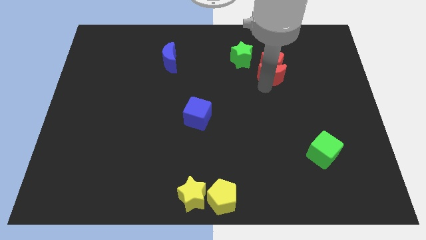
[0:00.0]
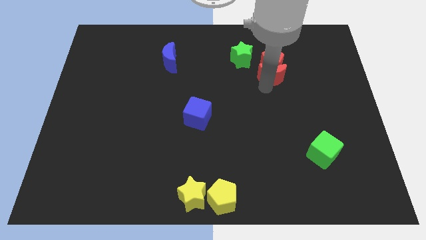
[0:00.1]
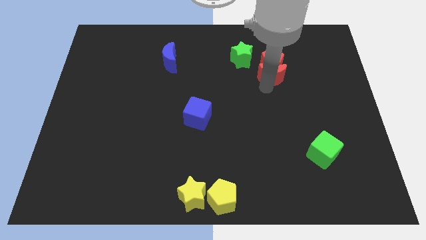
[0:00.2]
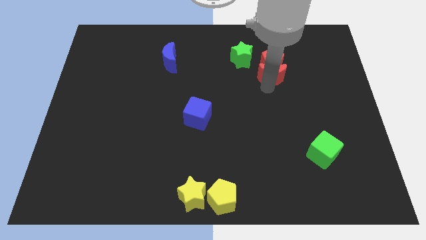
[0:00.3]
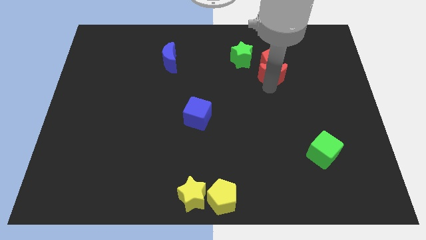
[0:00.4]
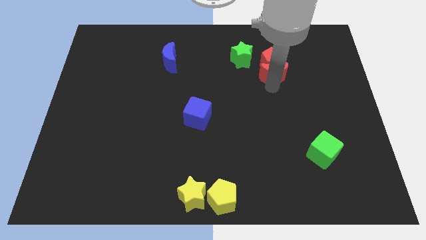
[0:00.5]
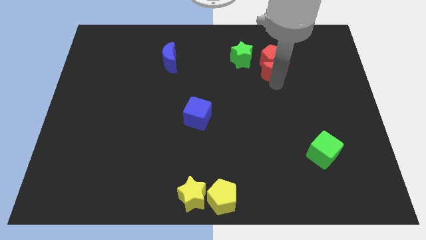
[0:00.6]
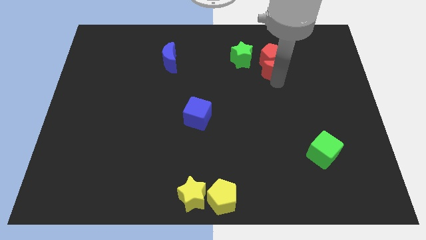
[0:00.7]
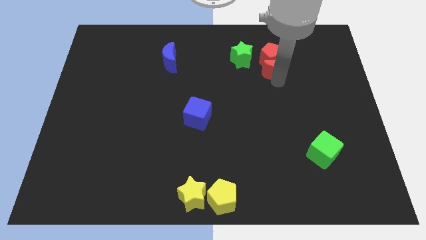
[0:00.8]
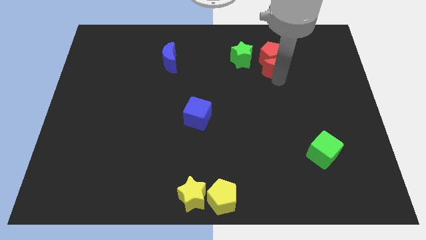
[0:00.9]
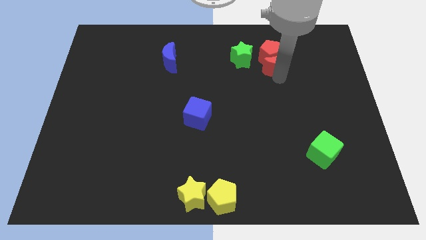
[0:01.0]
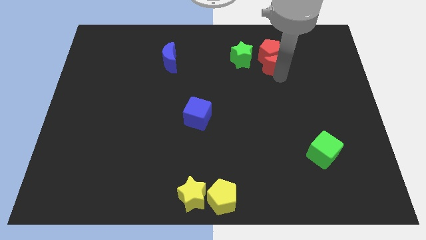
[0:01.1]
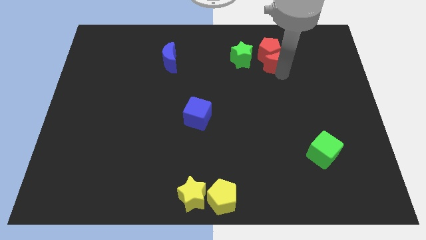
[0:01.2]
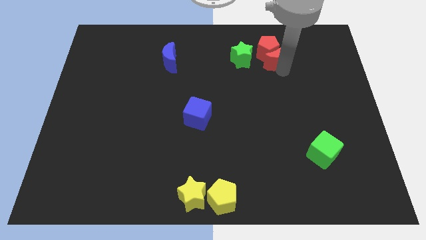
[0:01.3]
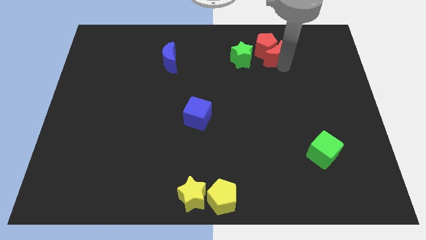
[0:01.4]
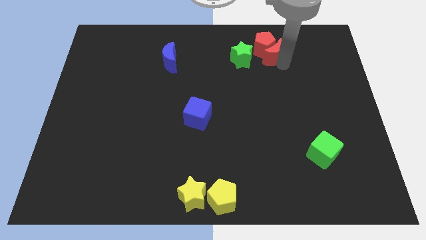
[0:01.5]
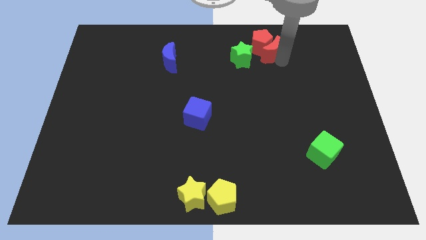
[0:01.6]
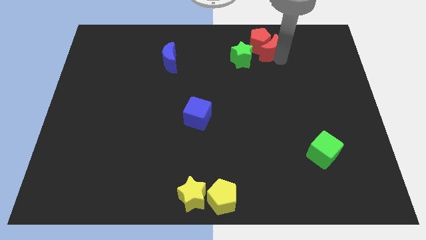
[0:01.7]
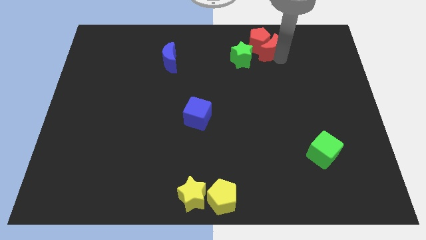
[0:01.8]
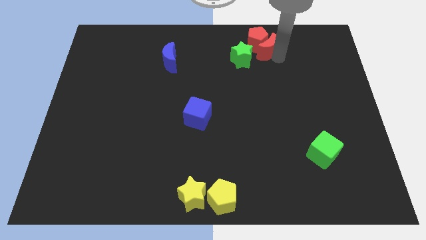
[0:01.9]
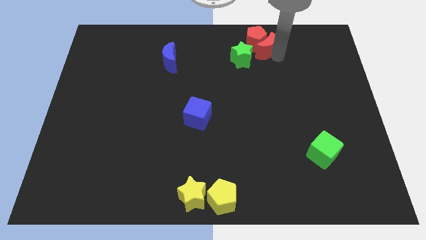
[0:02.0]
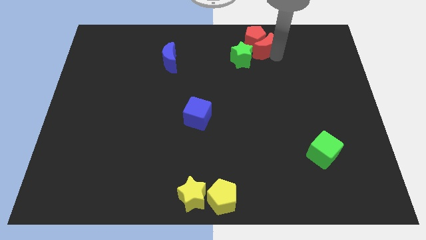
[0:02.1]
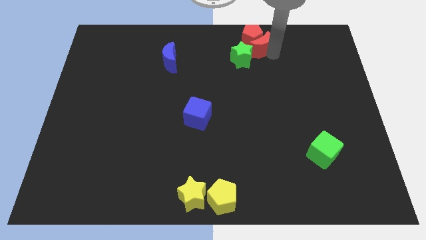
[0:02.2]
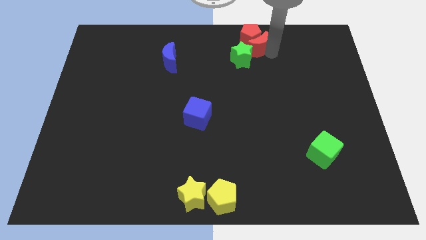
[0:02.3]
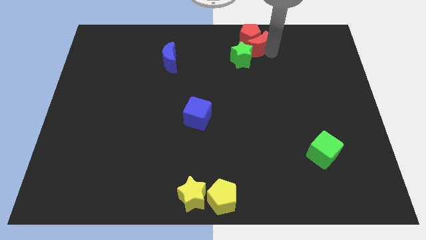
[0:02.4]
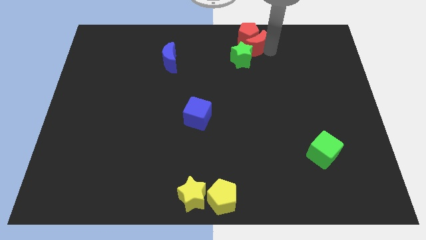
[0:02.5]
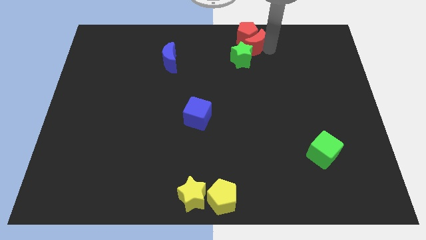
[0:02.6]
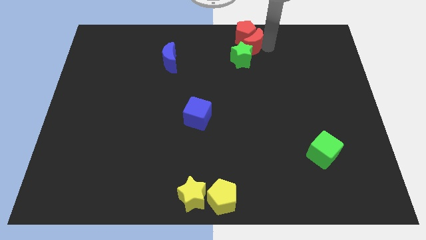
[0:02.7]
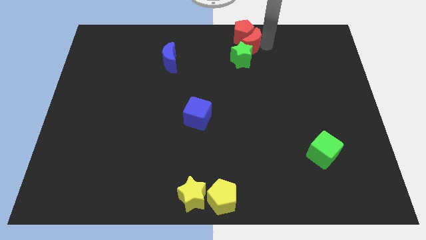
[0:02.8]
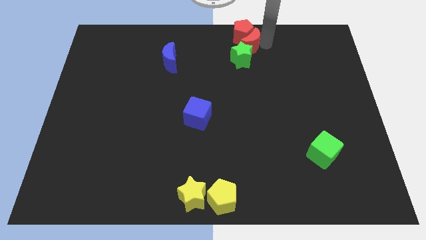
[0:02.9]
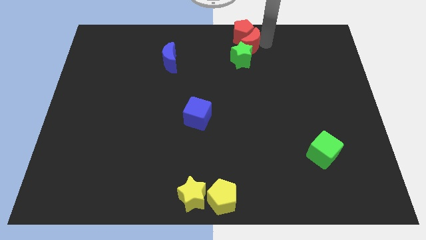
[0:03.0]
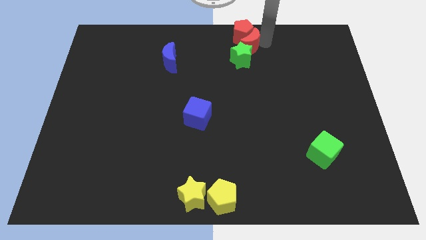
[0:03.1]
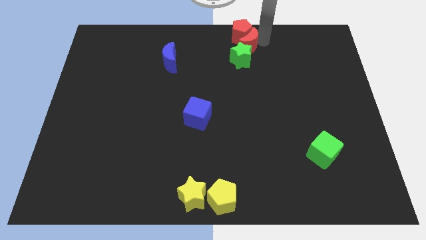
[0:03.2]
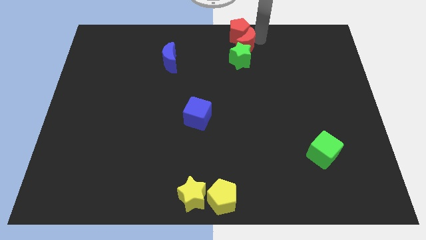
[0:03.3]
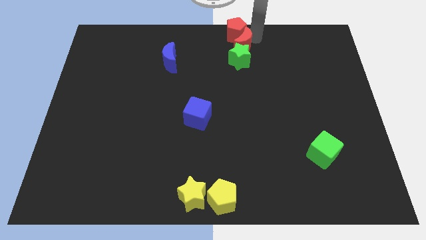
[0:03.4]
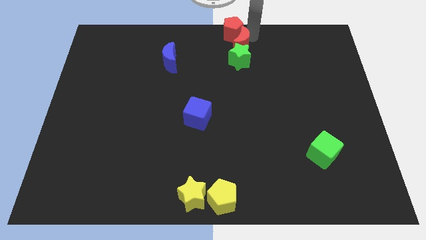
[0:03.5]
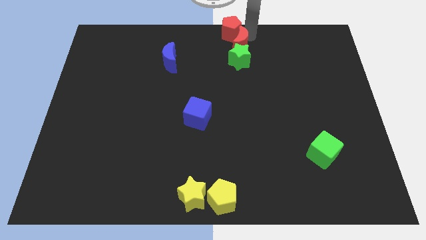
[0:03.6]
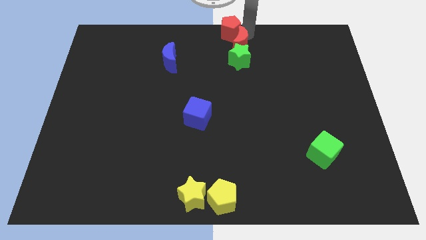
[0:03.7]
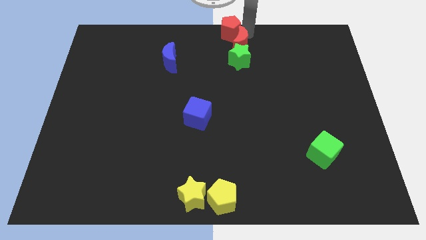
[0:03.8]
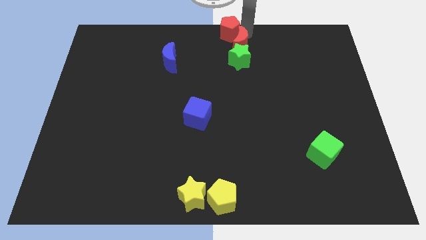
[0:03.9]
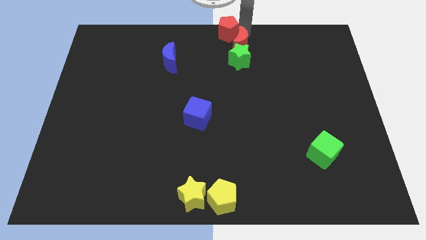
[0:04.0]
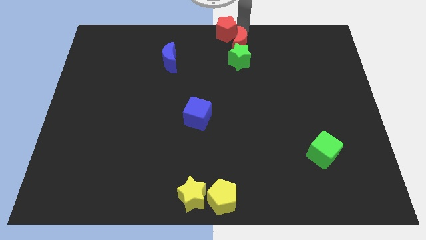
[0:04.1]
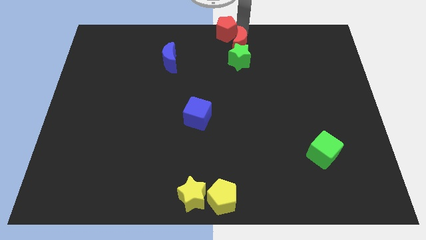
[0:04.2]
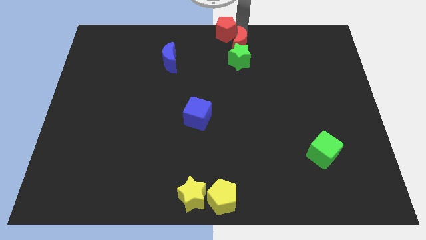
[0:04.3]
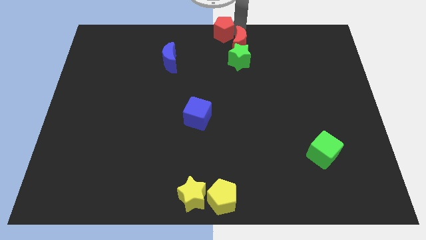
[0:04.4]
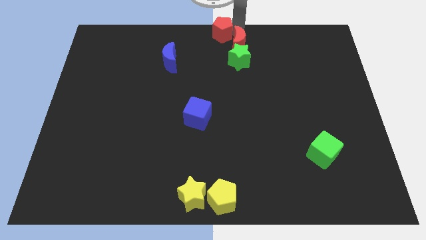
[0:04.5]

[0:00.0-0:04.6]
push the red crescent along the red pentagon to the top center of the board

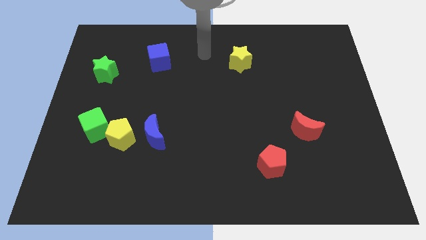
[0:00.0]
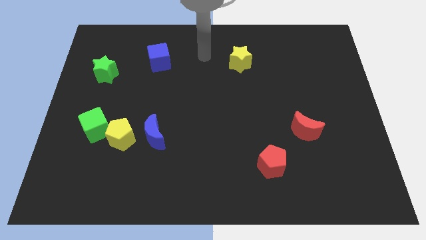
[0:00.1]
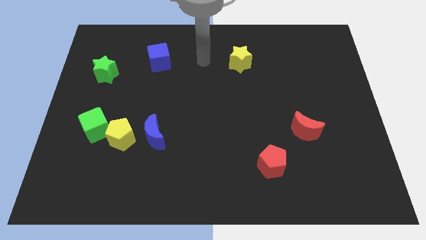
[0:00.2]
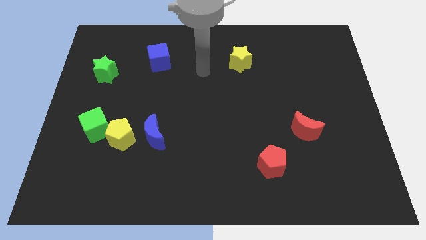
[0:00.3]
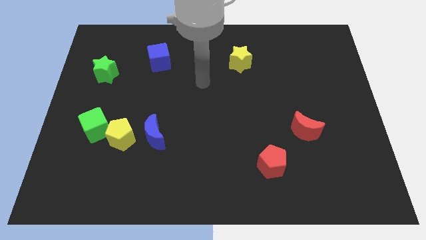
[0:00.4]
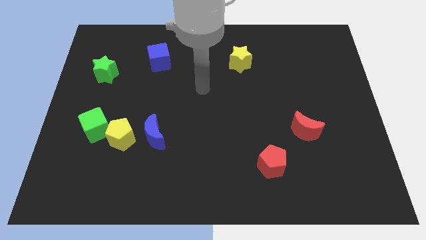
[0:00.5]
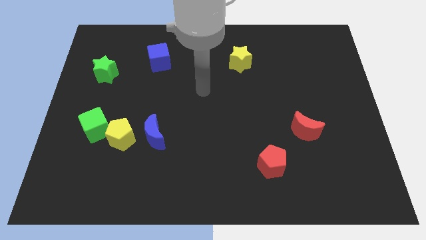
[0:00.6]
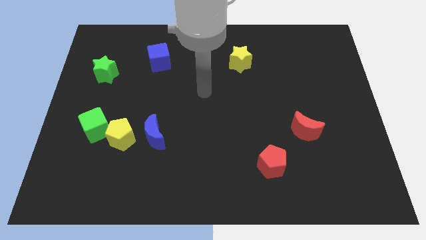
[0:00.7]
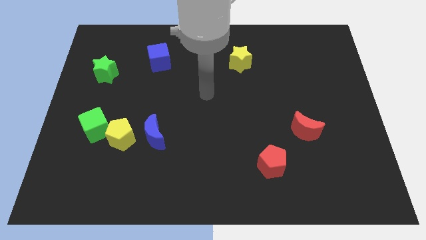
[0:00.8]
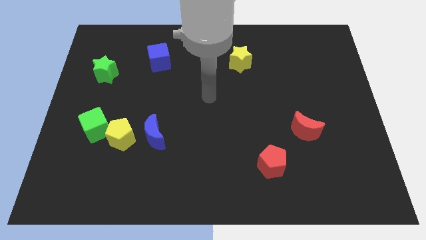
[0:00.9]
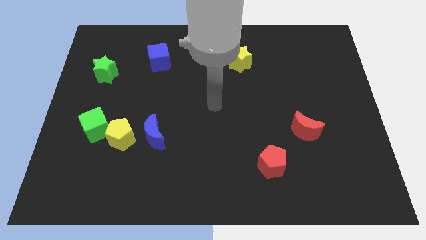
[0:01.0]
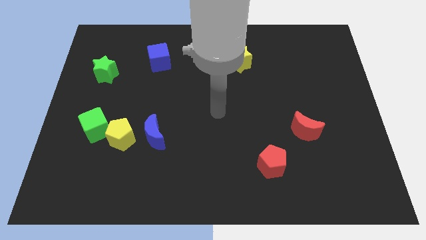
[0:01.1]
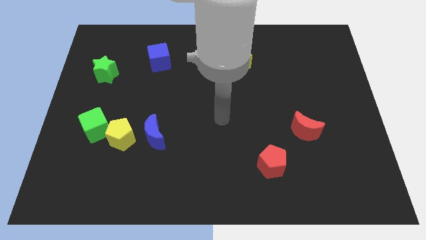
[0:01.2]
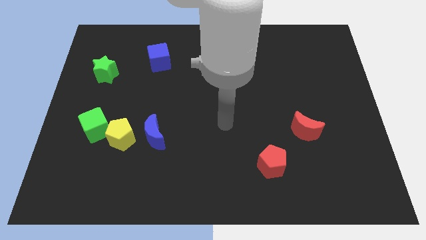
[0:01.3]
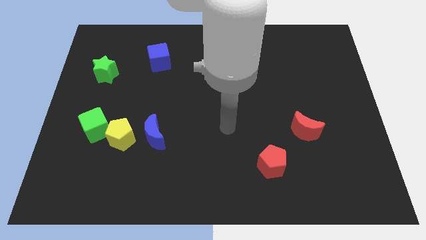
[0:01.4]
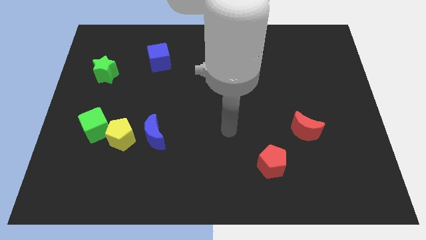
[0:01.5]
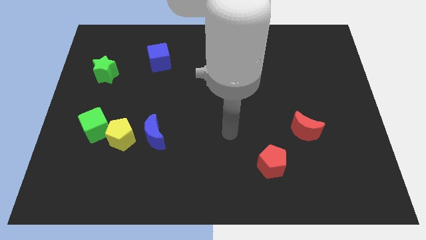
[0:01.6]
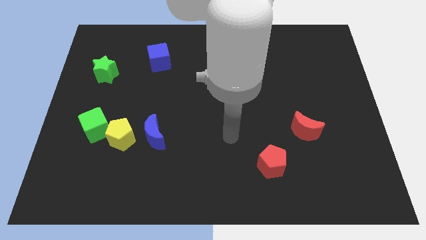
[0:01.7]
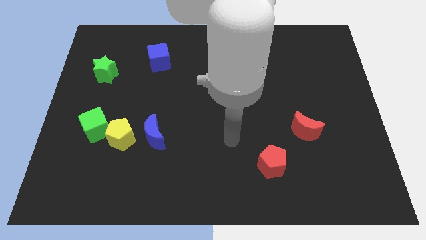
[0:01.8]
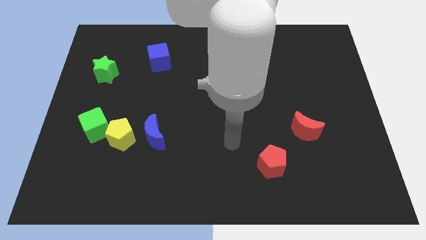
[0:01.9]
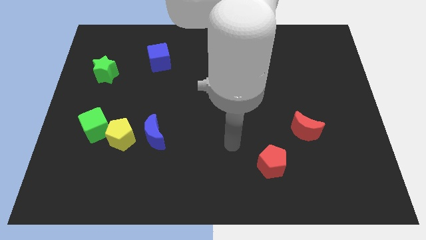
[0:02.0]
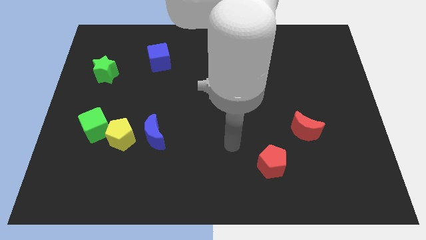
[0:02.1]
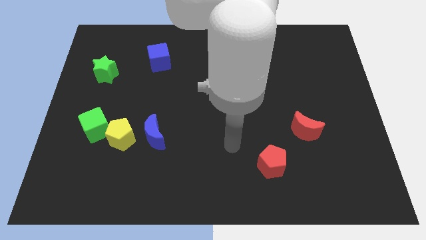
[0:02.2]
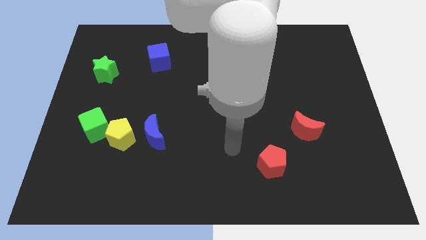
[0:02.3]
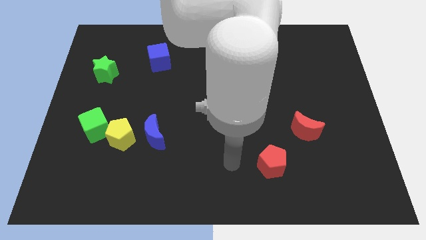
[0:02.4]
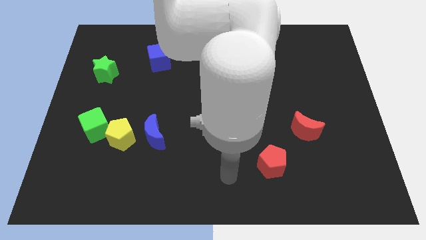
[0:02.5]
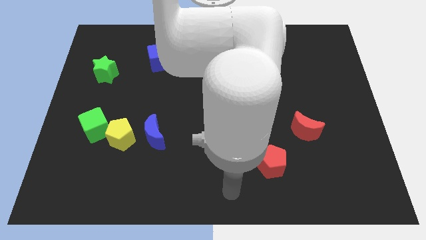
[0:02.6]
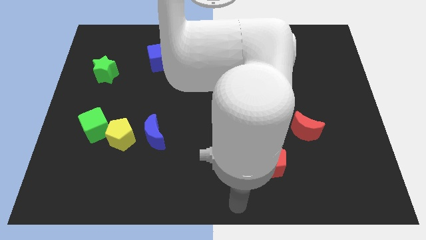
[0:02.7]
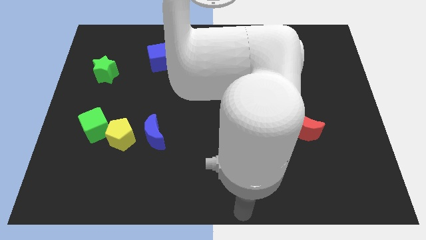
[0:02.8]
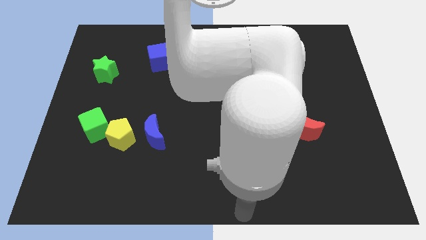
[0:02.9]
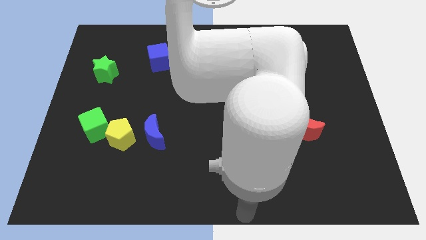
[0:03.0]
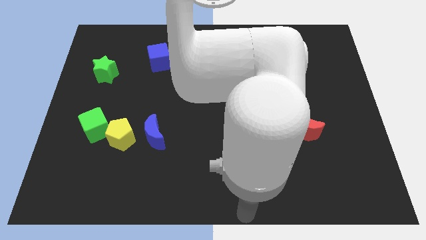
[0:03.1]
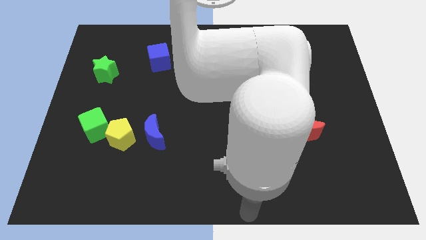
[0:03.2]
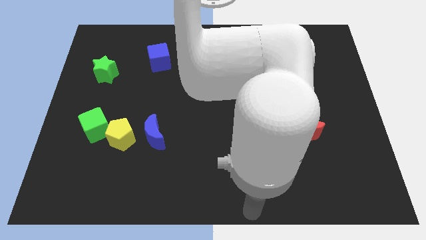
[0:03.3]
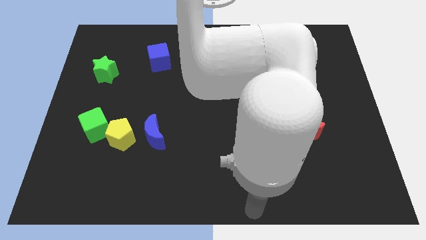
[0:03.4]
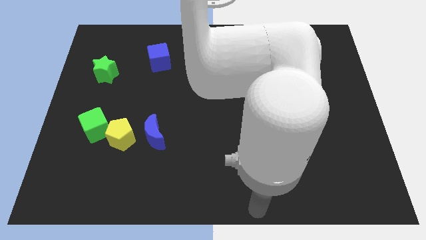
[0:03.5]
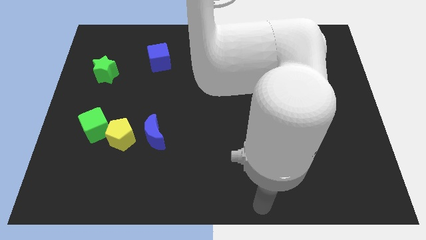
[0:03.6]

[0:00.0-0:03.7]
place your arm to the bottom of red pentagon

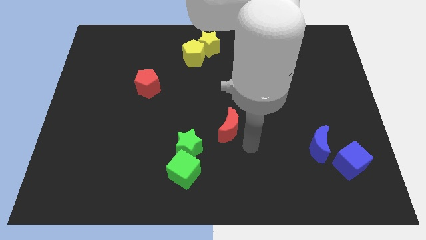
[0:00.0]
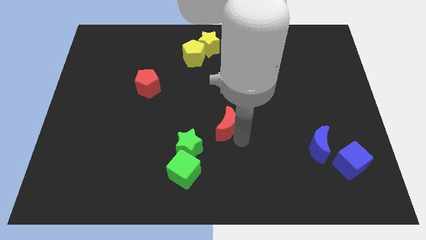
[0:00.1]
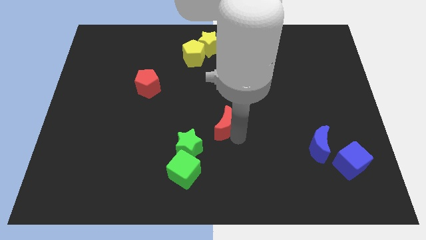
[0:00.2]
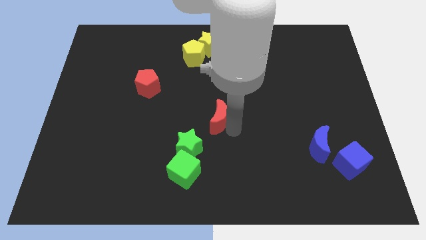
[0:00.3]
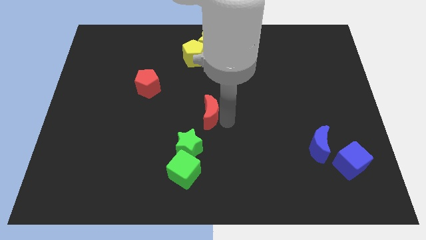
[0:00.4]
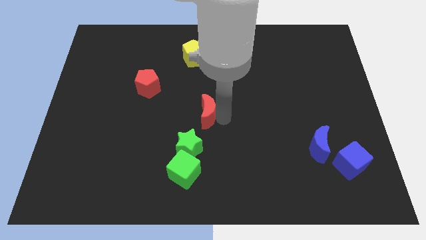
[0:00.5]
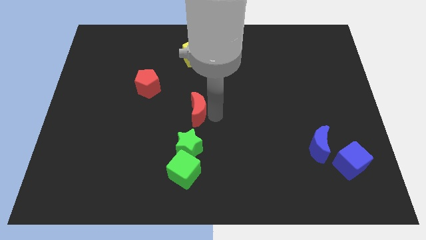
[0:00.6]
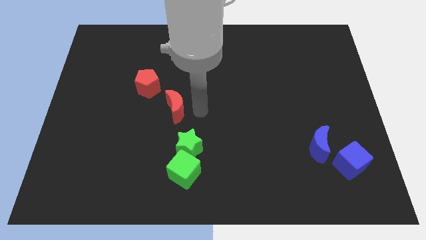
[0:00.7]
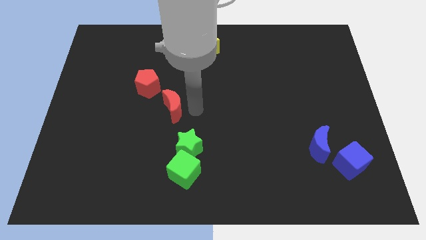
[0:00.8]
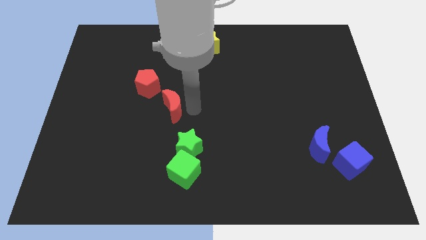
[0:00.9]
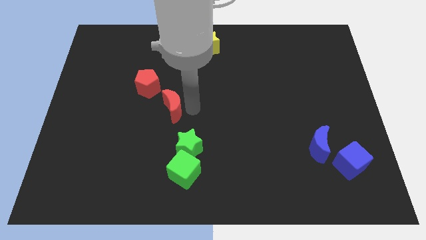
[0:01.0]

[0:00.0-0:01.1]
move red crescent towards red pentagon
